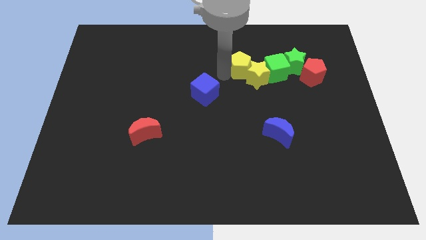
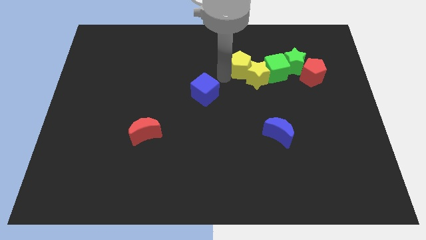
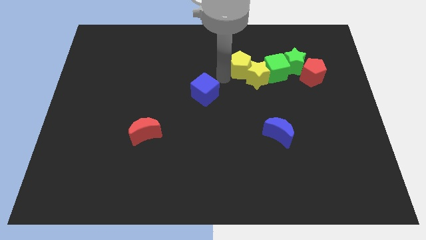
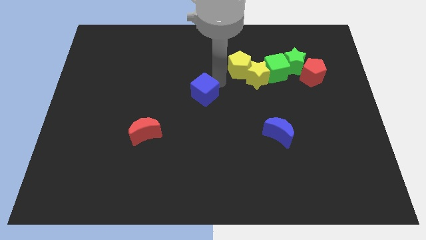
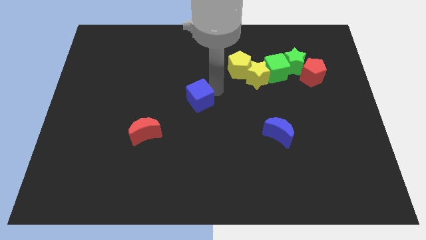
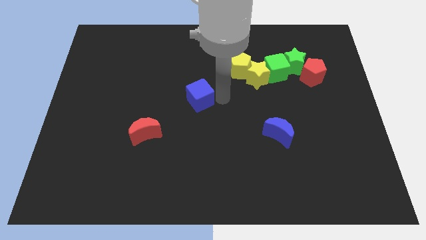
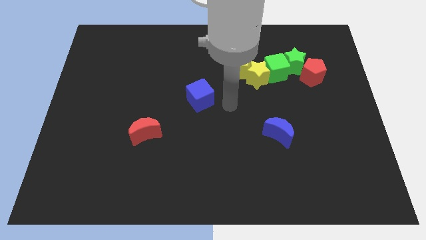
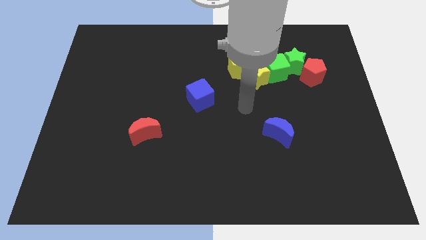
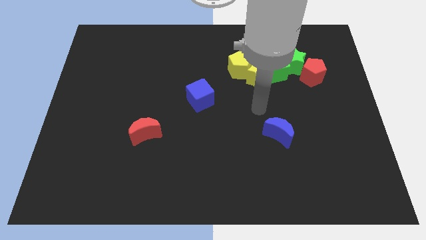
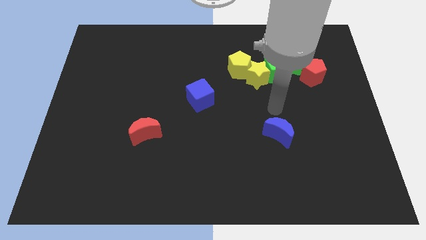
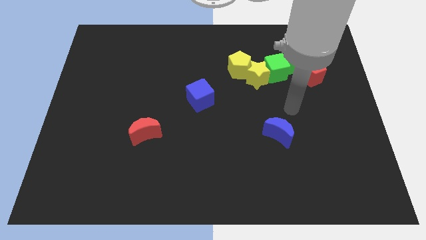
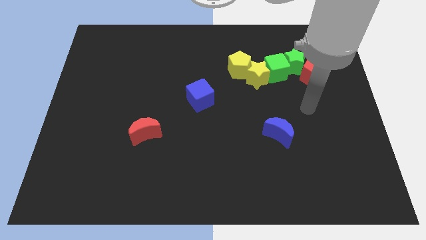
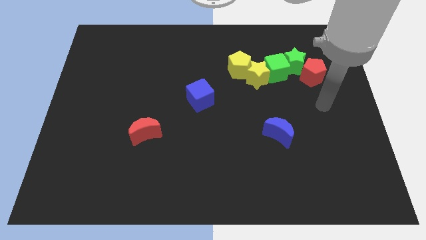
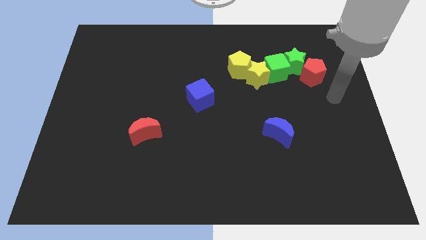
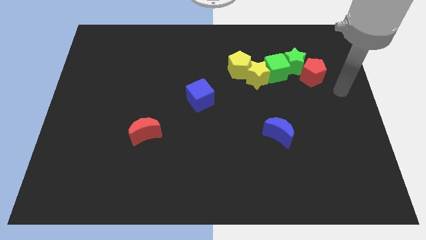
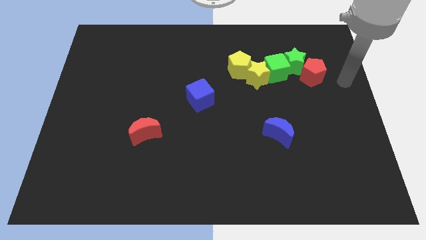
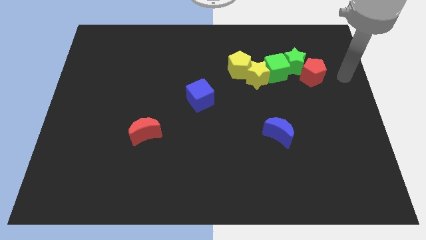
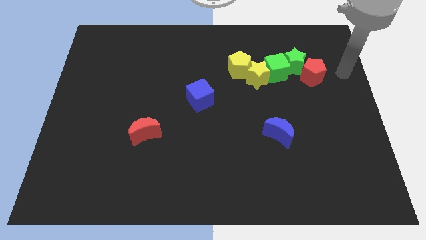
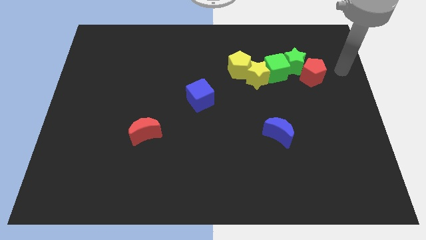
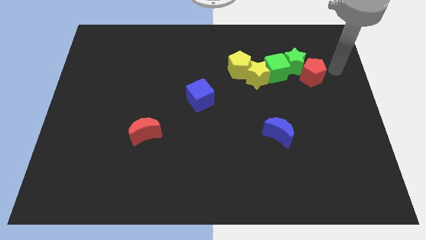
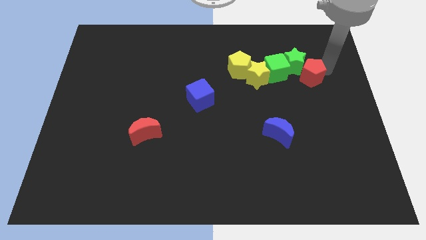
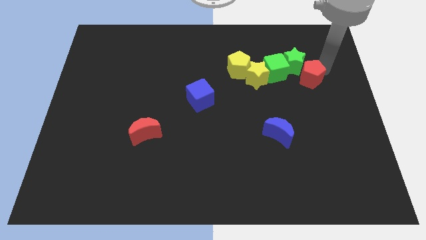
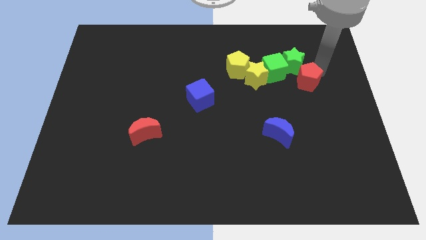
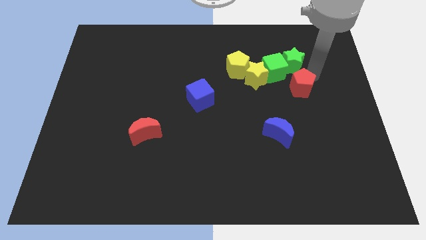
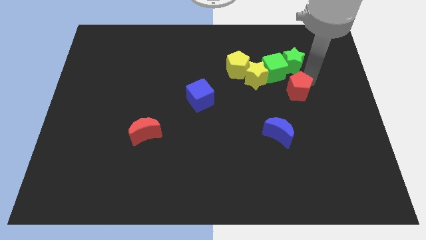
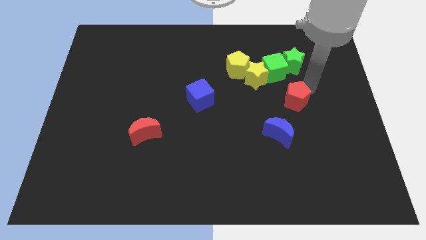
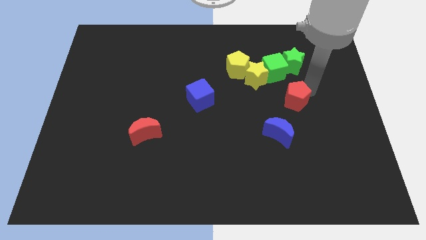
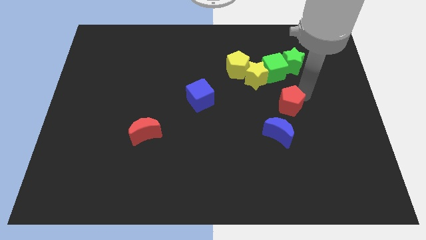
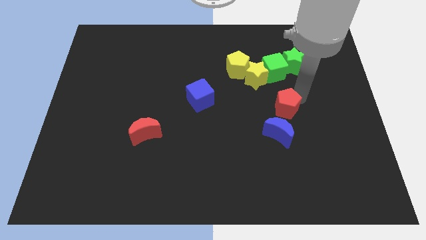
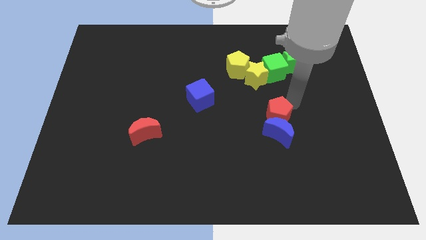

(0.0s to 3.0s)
move the red pentagon to the top of the blue crescent

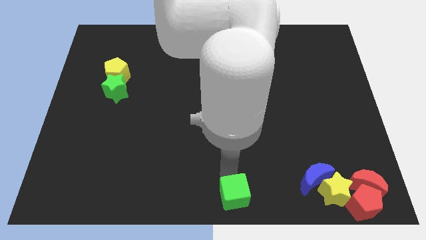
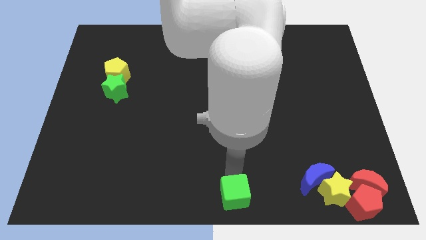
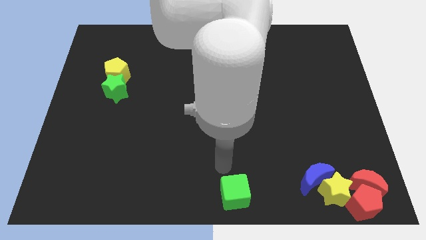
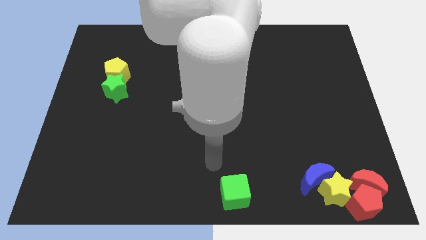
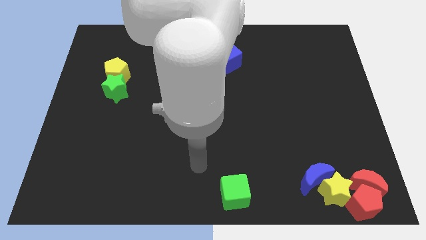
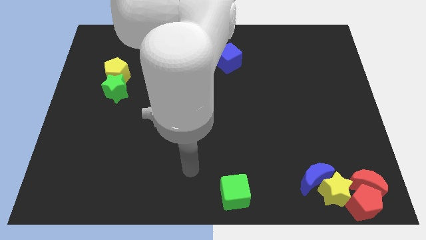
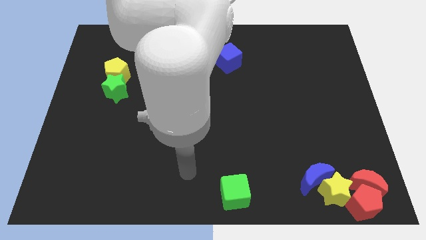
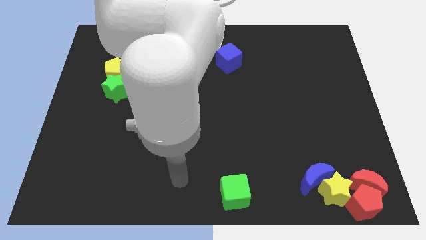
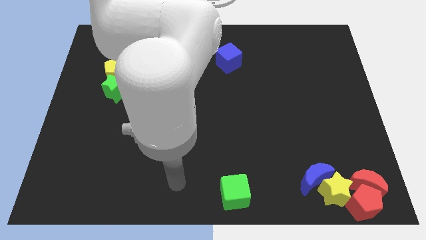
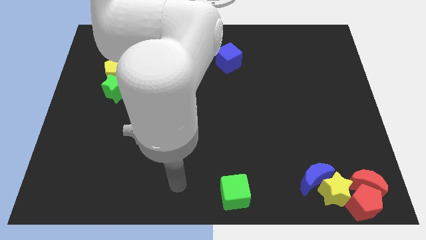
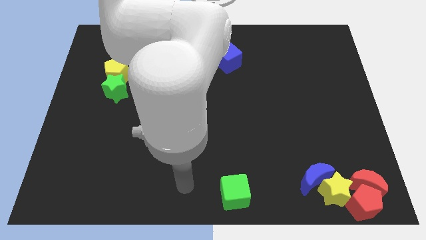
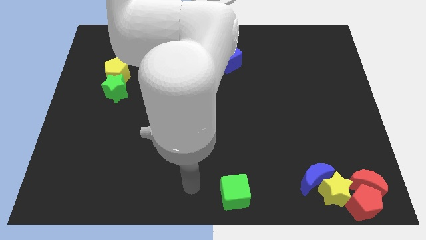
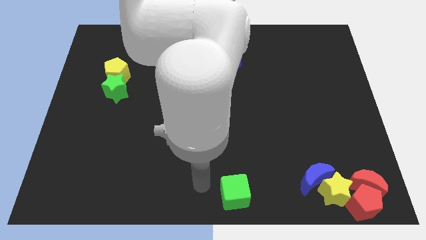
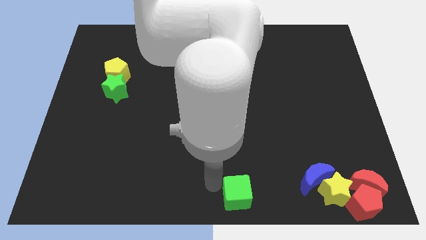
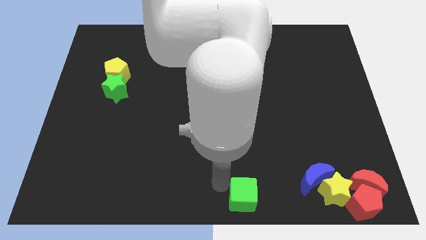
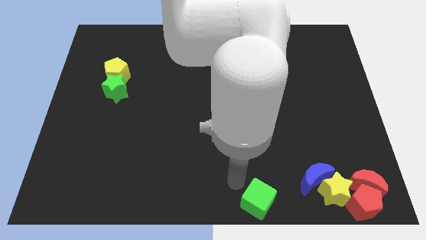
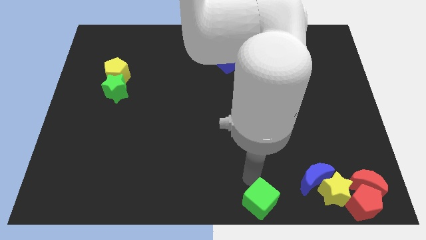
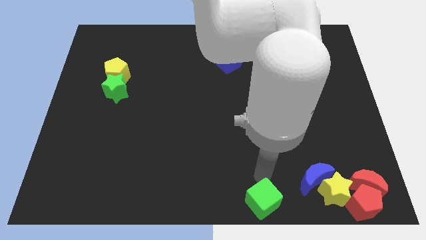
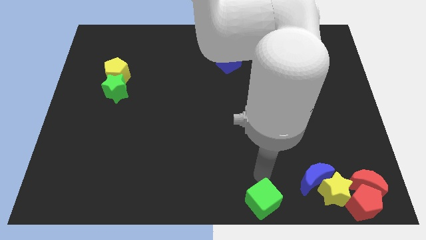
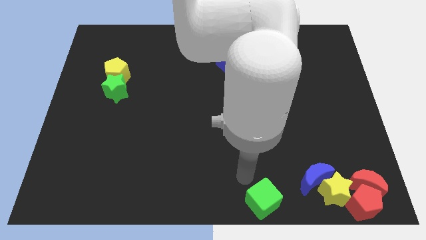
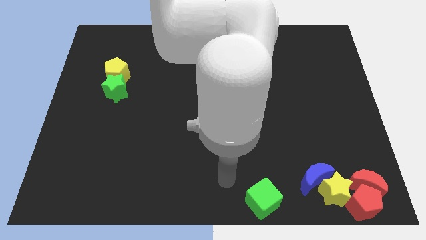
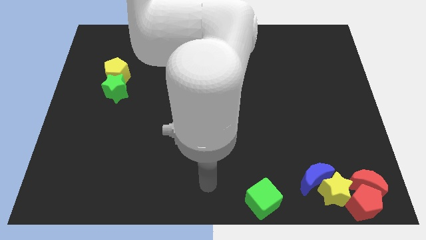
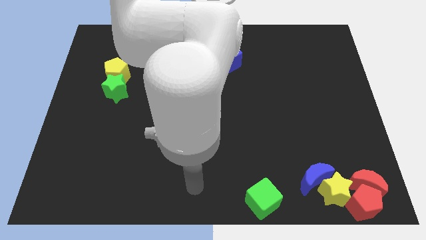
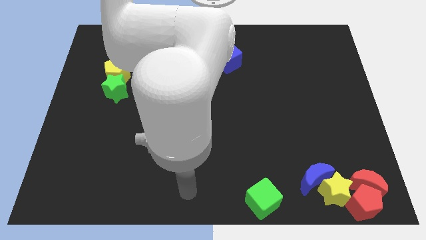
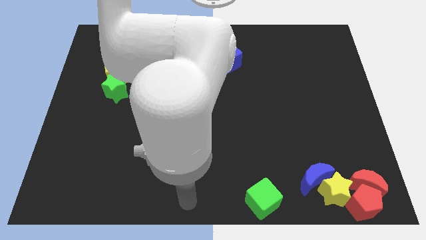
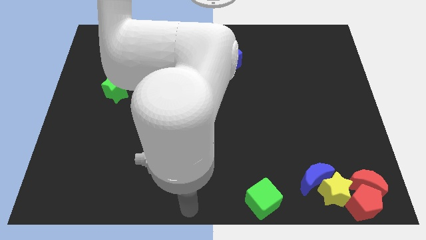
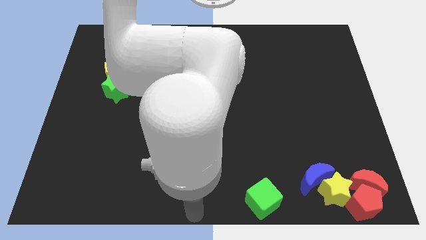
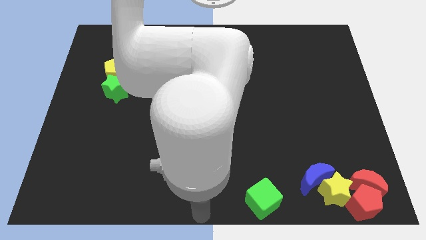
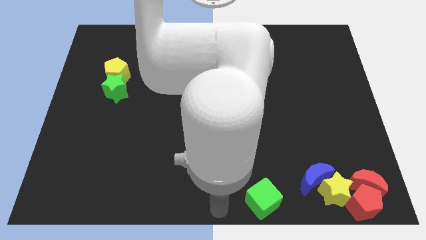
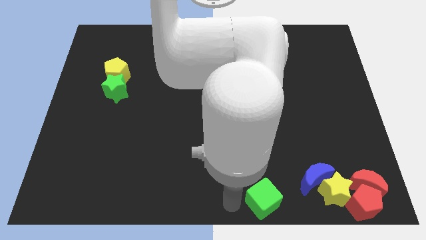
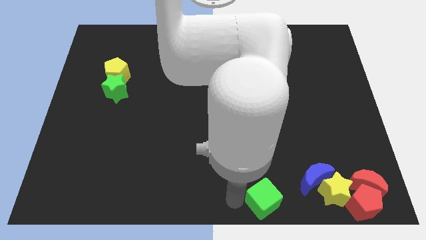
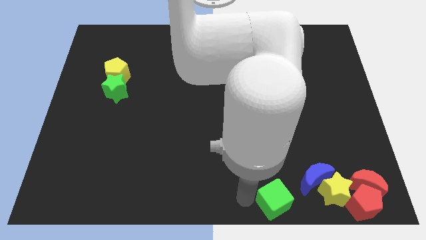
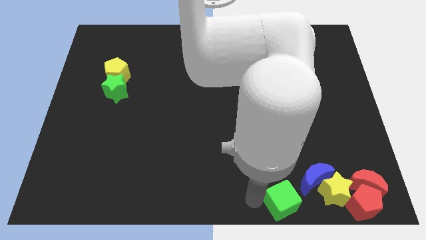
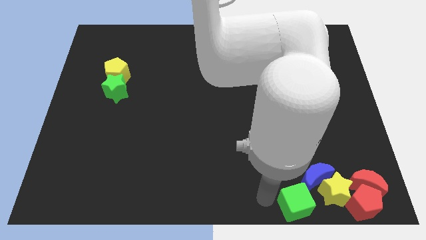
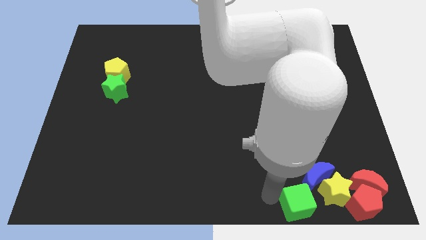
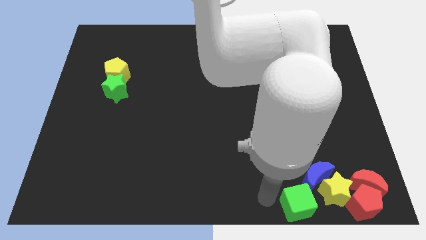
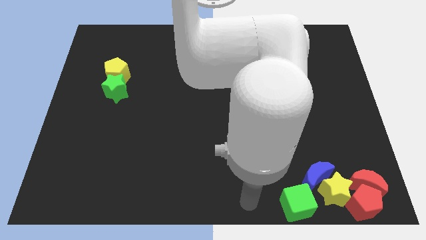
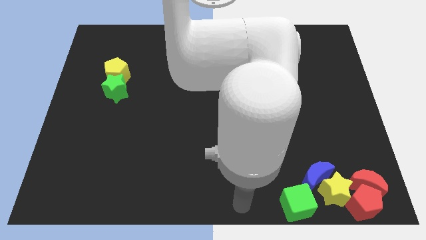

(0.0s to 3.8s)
move the green cube towards the group of objects

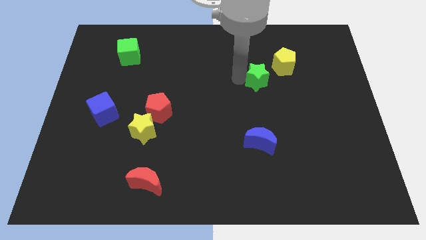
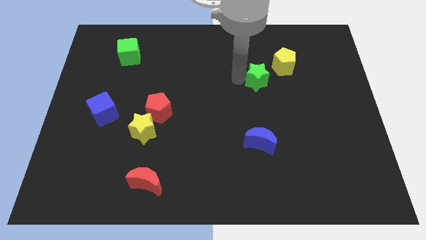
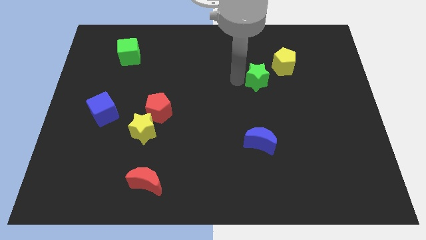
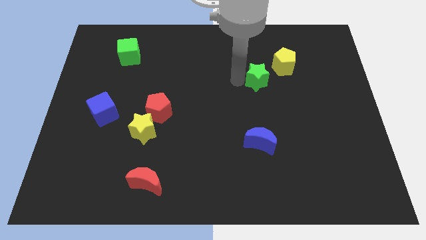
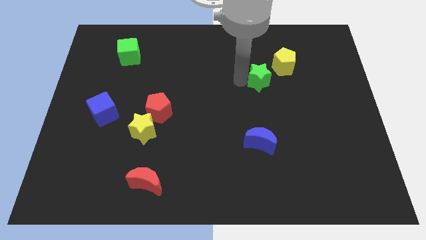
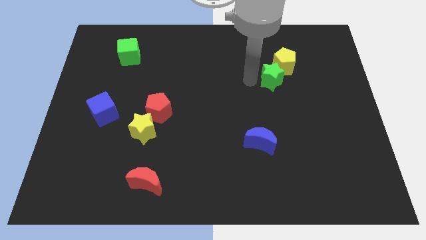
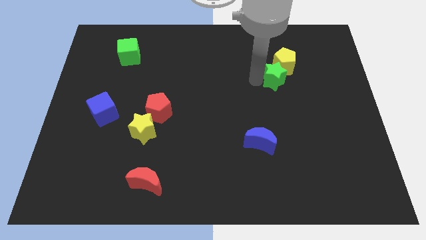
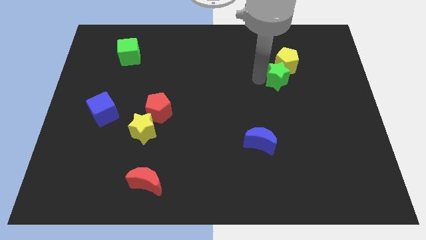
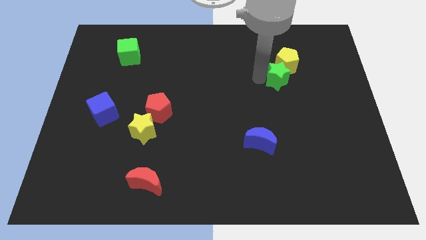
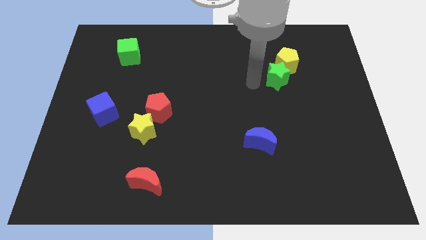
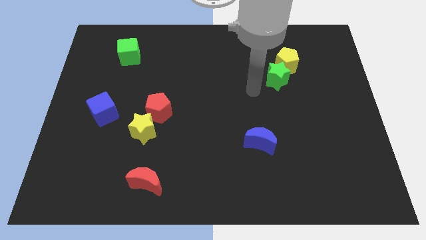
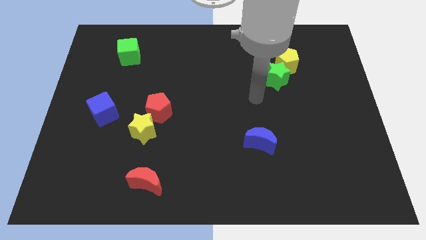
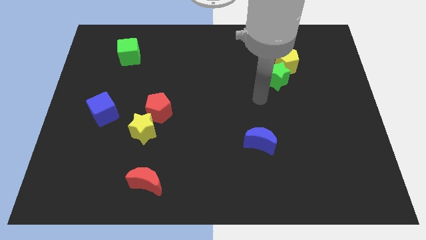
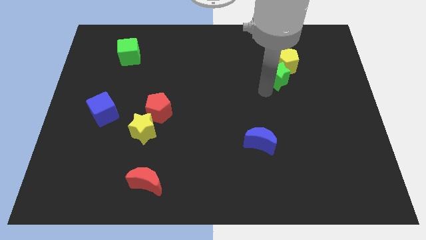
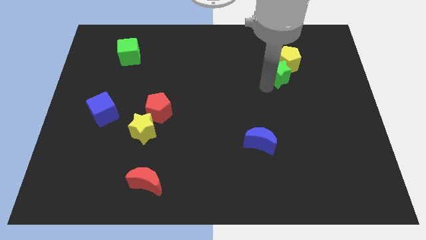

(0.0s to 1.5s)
push the green star into yellow pentagon

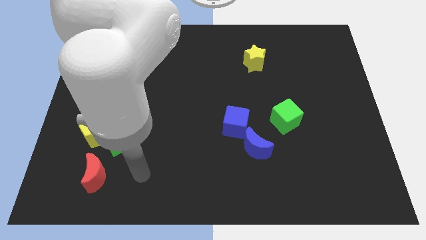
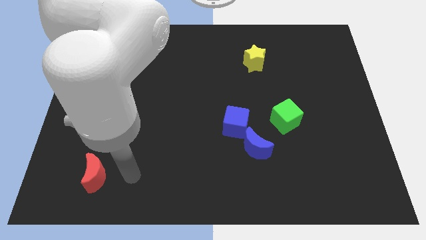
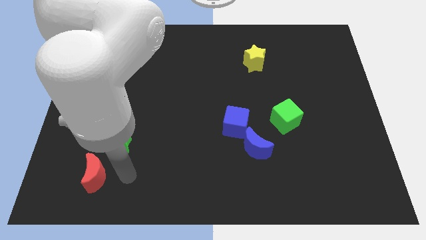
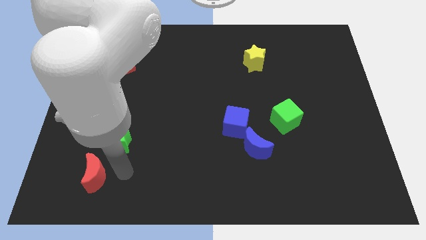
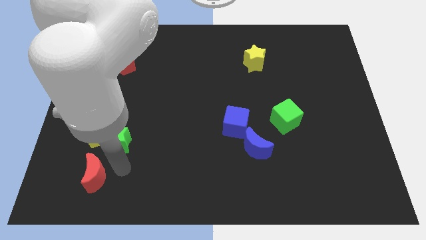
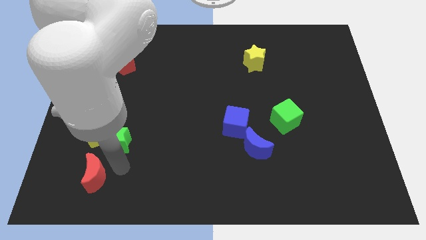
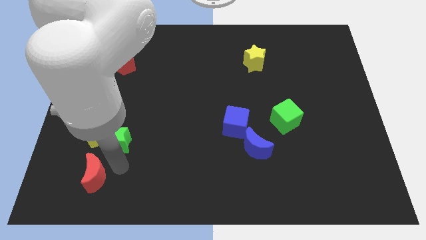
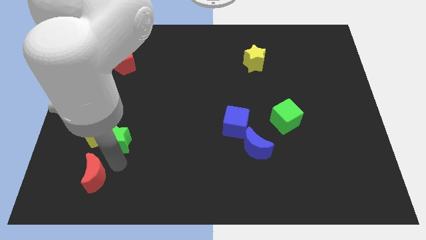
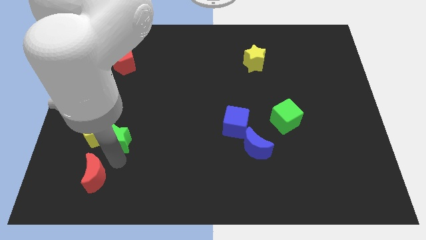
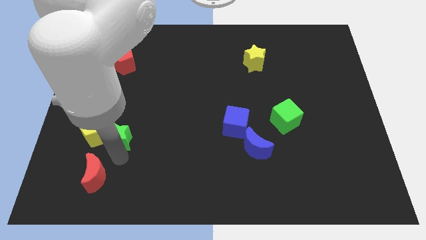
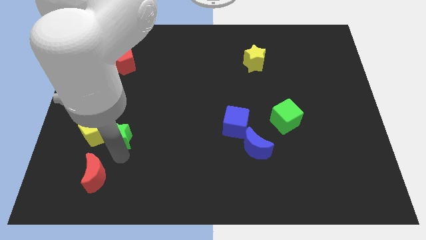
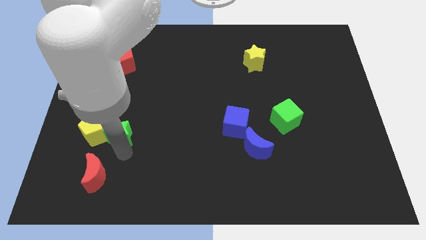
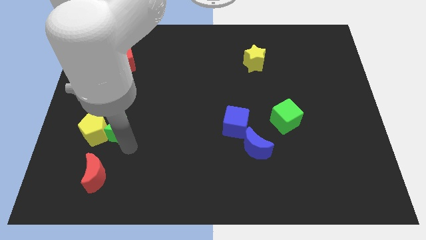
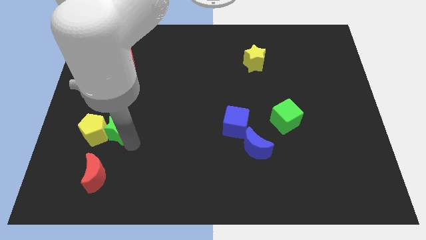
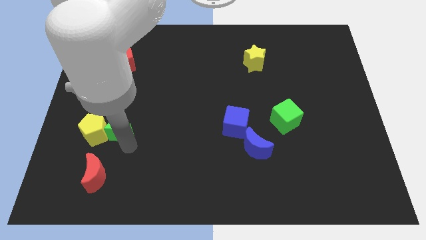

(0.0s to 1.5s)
push the green star to the right of the yellow pentagon
